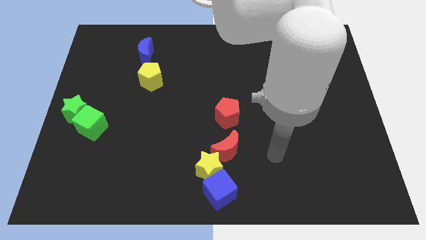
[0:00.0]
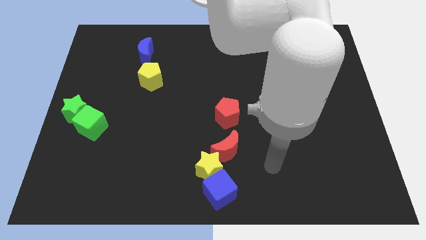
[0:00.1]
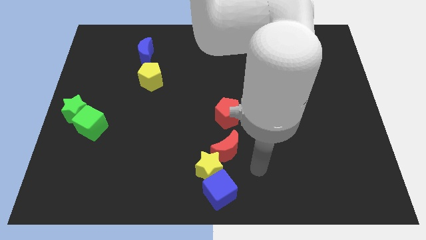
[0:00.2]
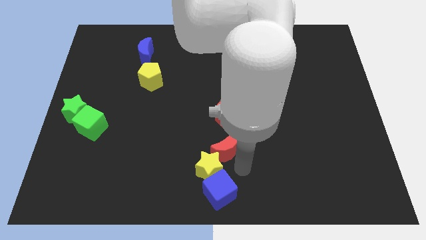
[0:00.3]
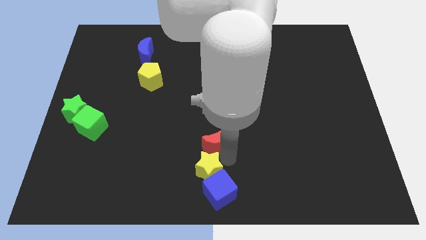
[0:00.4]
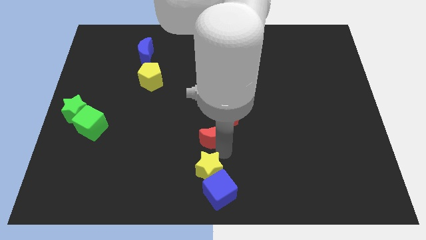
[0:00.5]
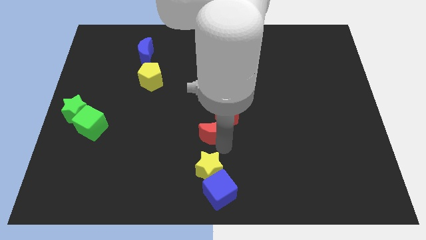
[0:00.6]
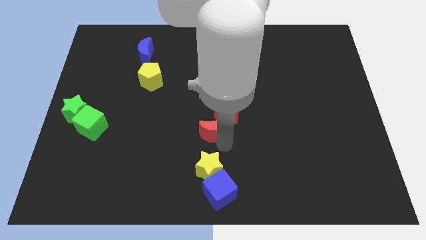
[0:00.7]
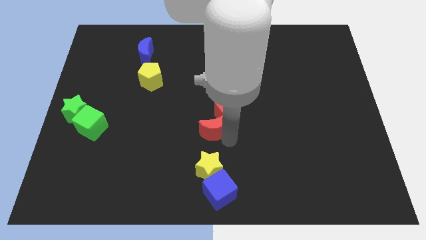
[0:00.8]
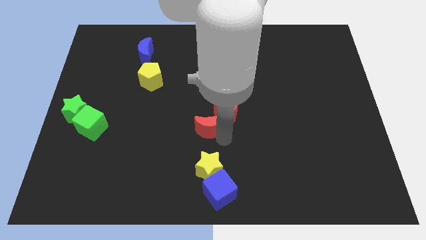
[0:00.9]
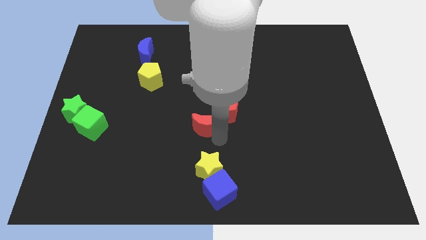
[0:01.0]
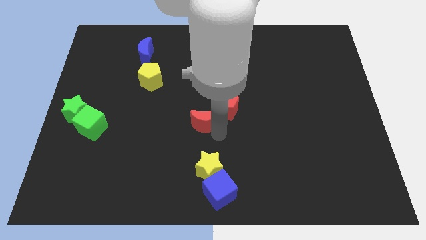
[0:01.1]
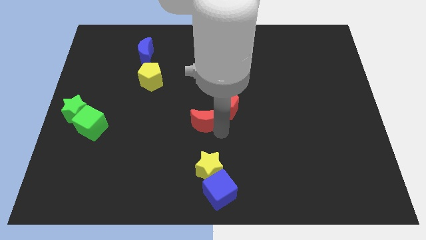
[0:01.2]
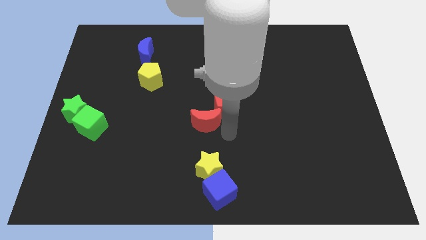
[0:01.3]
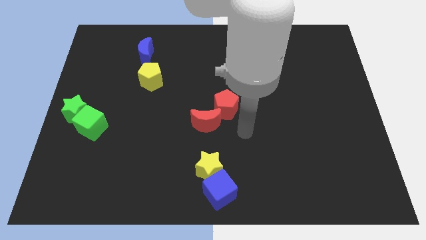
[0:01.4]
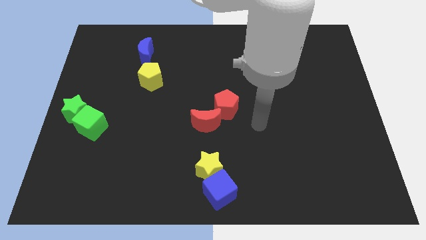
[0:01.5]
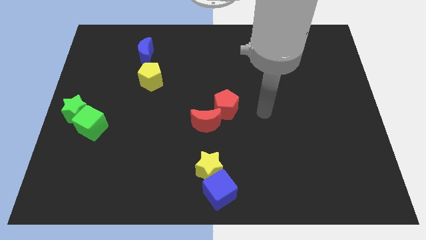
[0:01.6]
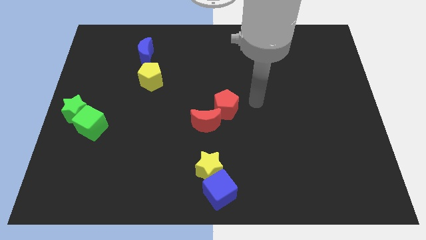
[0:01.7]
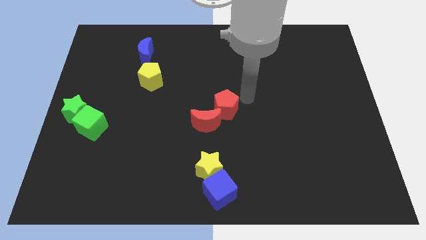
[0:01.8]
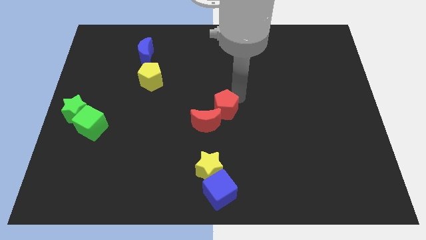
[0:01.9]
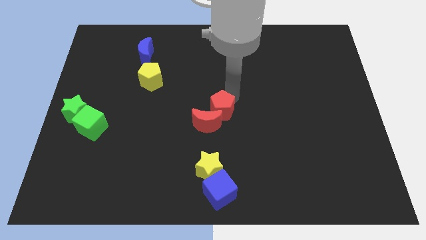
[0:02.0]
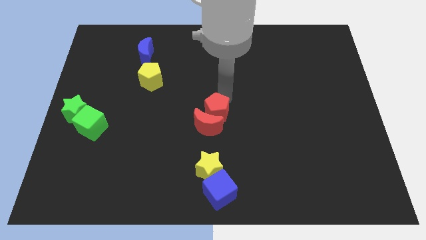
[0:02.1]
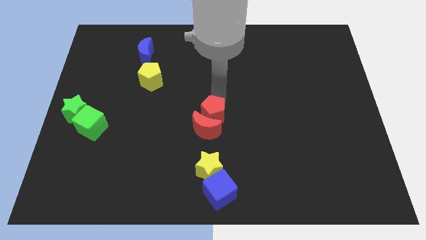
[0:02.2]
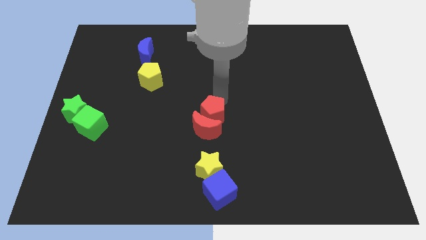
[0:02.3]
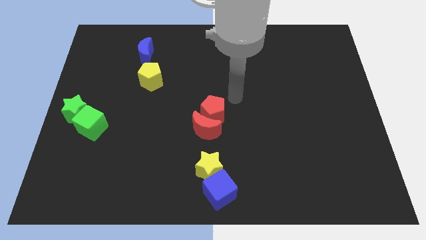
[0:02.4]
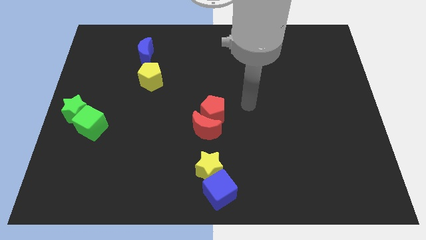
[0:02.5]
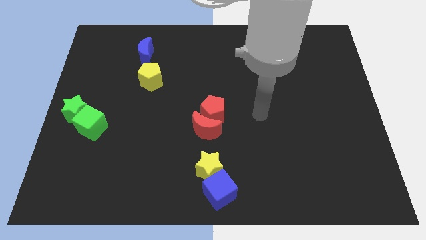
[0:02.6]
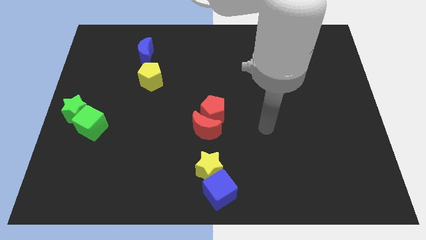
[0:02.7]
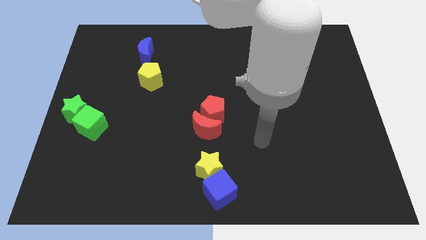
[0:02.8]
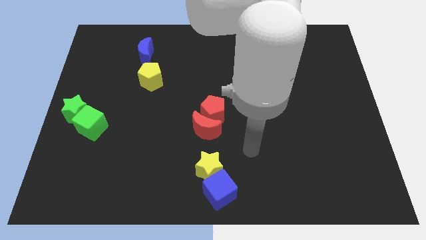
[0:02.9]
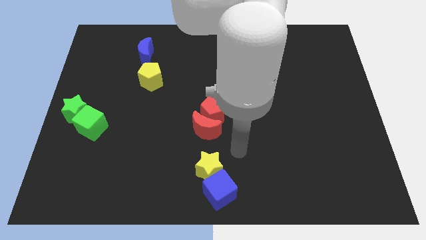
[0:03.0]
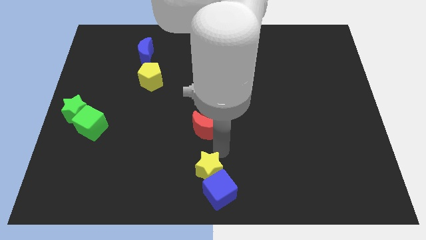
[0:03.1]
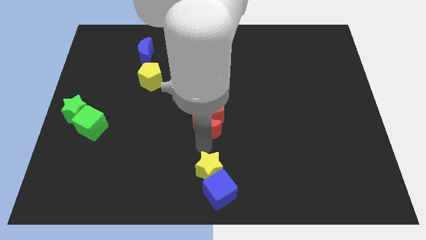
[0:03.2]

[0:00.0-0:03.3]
slightly touch the red moon and red pentagon

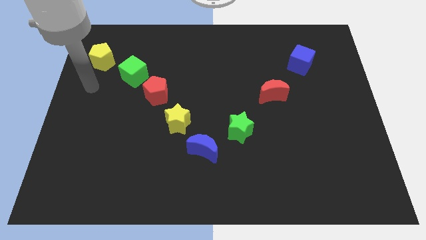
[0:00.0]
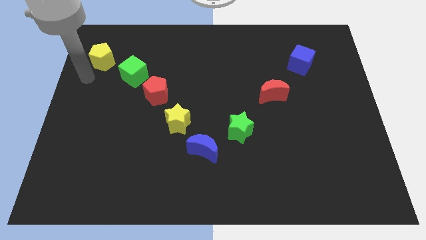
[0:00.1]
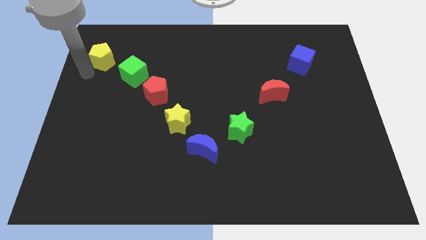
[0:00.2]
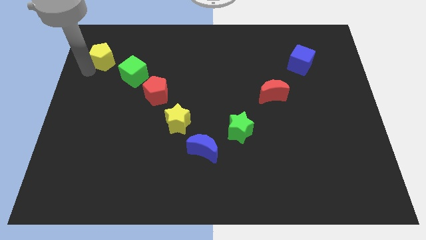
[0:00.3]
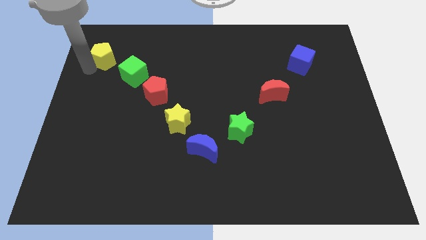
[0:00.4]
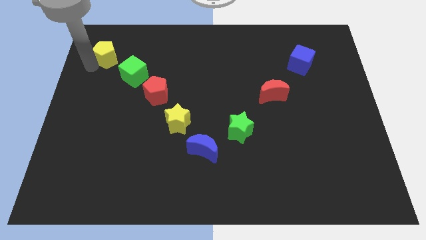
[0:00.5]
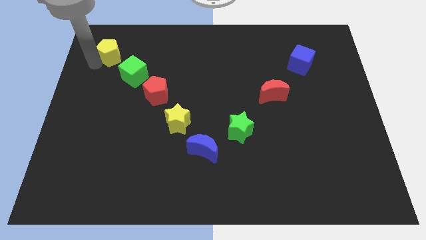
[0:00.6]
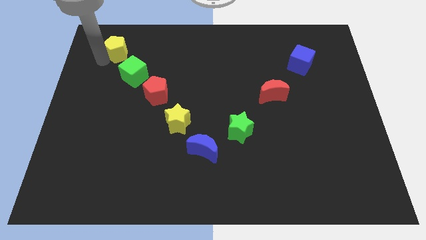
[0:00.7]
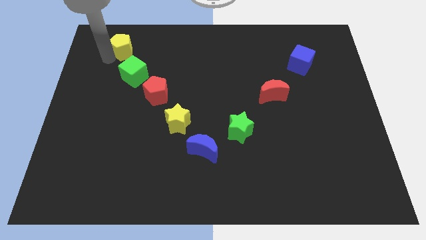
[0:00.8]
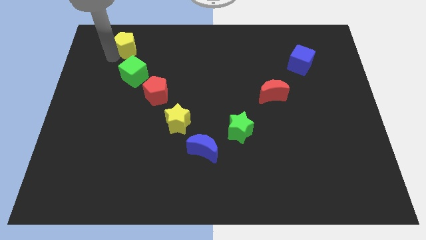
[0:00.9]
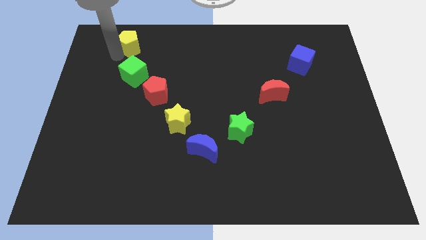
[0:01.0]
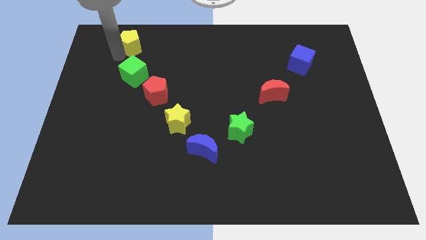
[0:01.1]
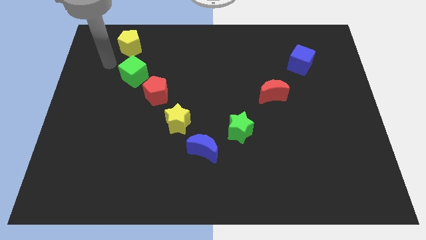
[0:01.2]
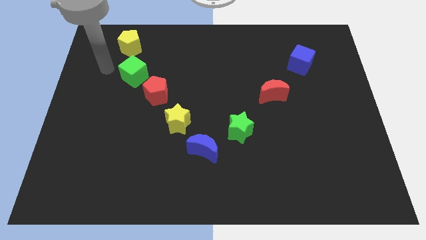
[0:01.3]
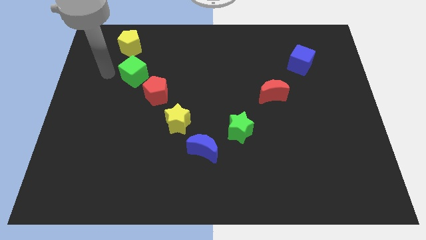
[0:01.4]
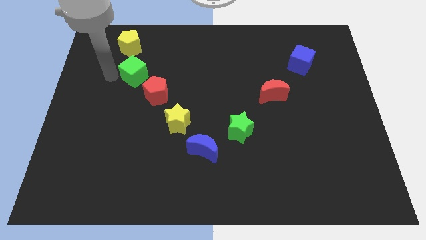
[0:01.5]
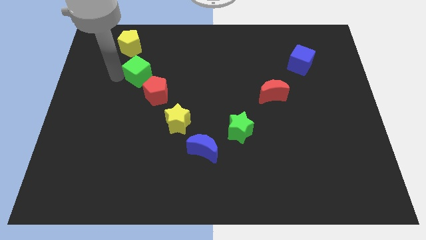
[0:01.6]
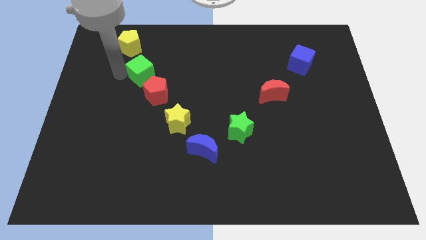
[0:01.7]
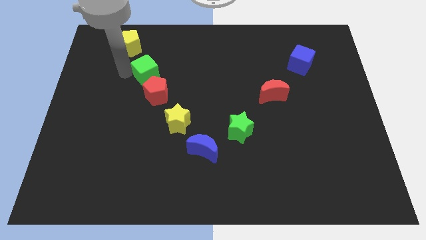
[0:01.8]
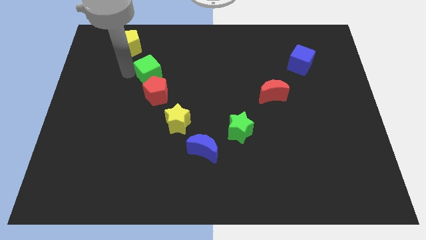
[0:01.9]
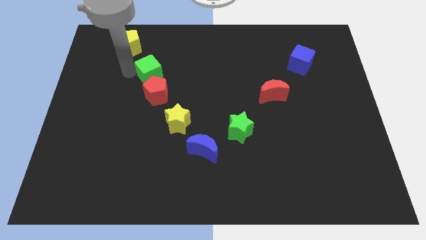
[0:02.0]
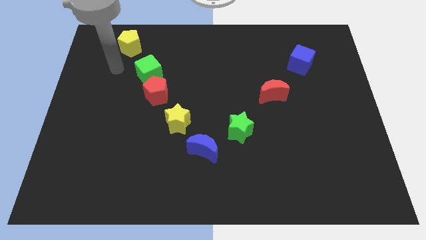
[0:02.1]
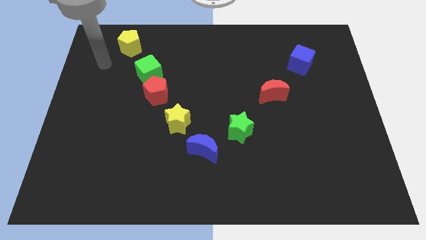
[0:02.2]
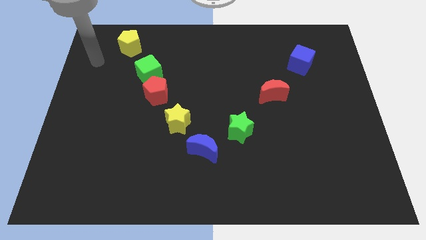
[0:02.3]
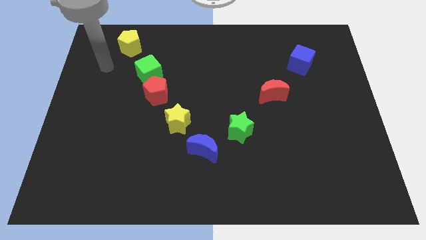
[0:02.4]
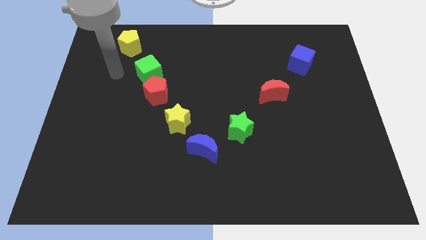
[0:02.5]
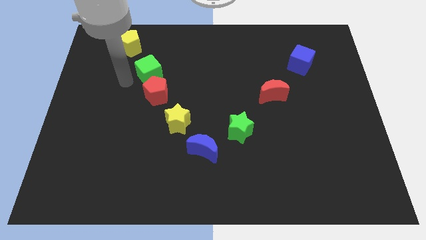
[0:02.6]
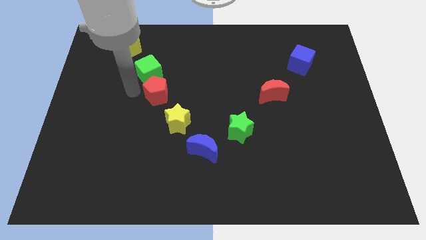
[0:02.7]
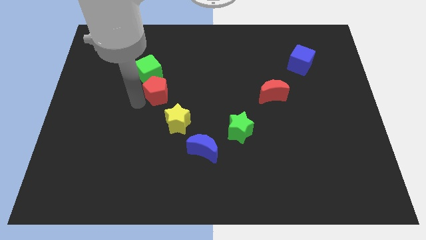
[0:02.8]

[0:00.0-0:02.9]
push yellow pentagon above green cube

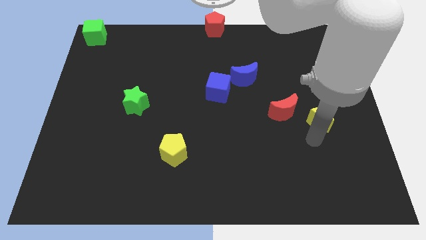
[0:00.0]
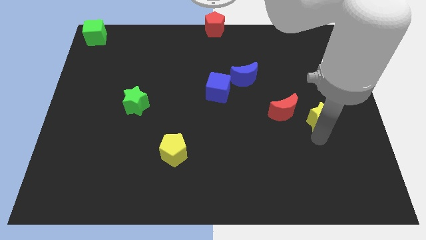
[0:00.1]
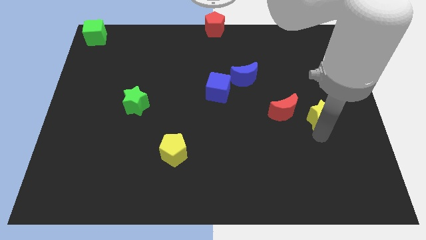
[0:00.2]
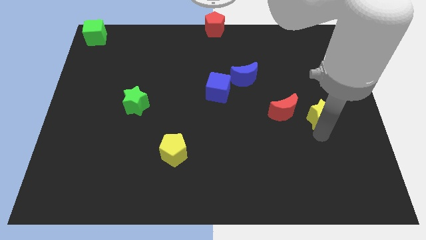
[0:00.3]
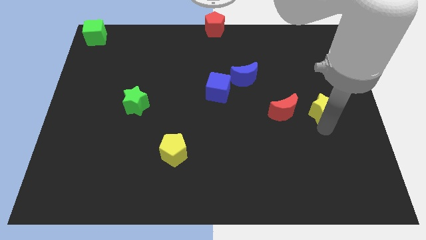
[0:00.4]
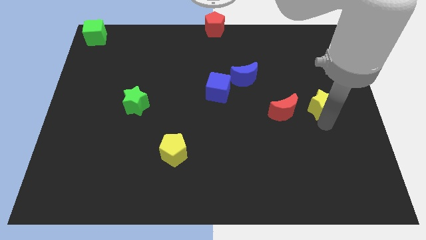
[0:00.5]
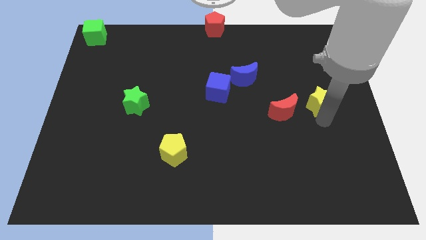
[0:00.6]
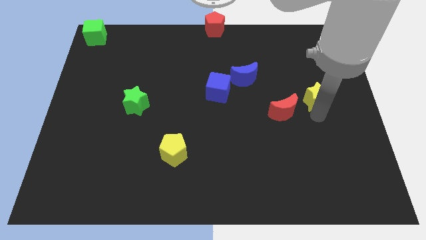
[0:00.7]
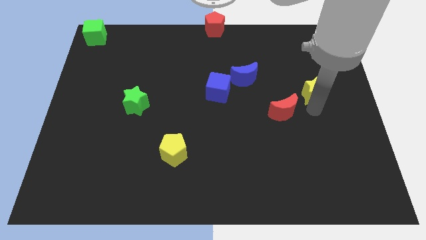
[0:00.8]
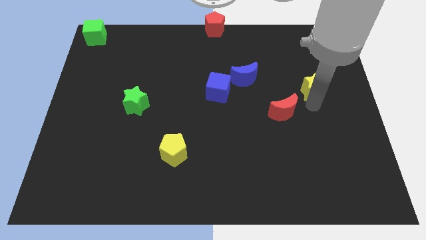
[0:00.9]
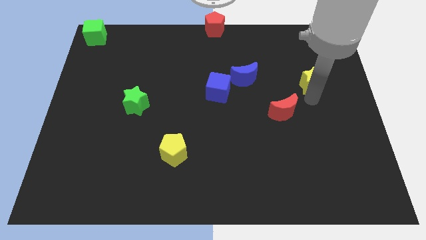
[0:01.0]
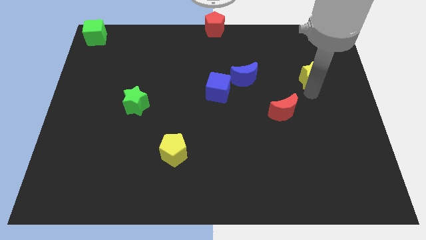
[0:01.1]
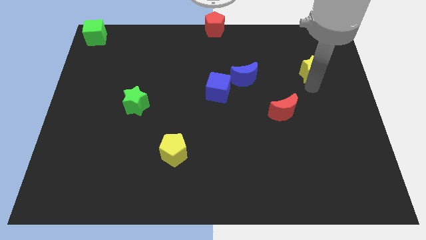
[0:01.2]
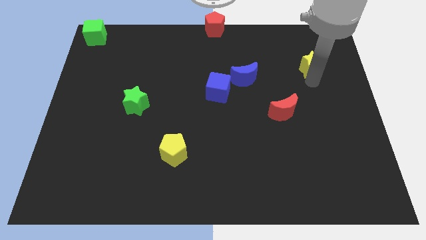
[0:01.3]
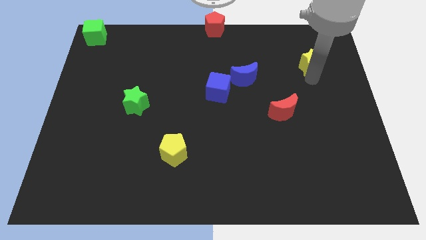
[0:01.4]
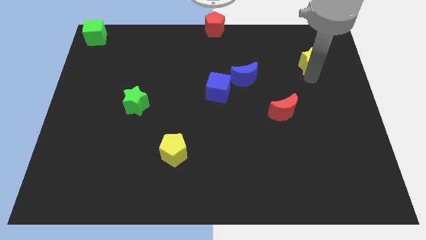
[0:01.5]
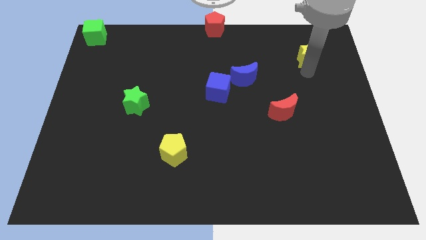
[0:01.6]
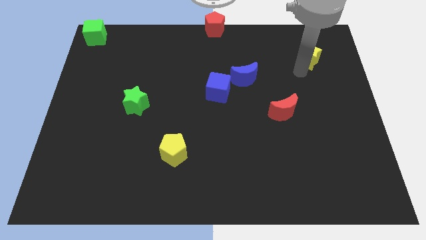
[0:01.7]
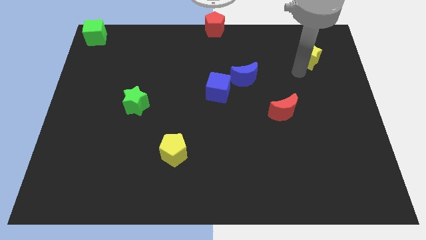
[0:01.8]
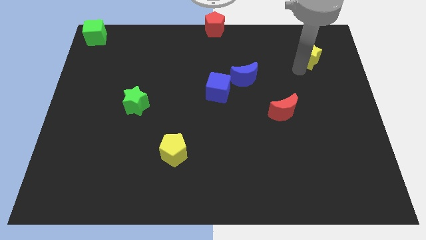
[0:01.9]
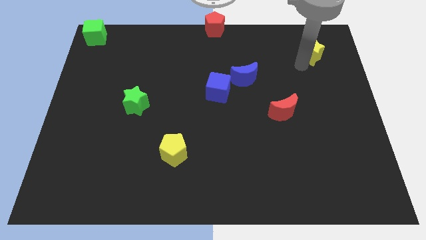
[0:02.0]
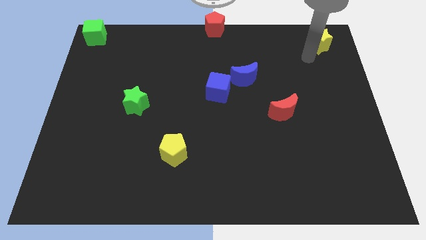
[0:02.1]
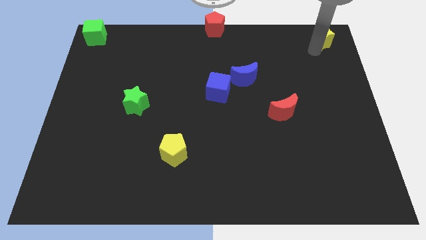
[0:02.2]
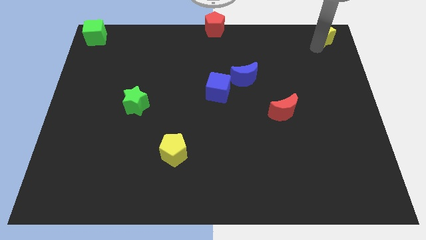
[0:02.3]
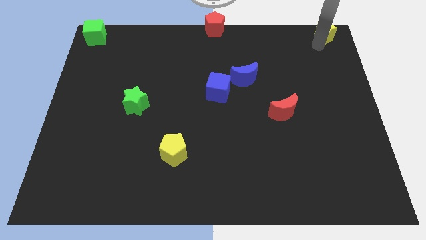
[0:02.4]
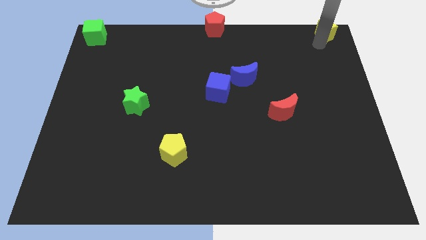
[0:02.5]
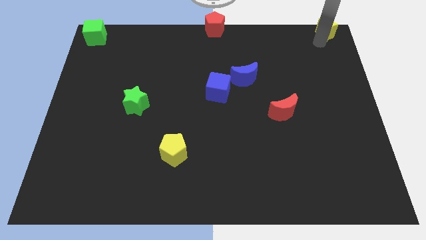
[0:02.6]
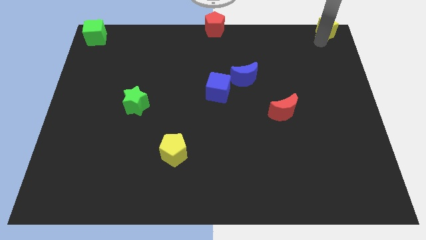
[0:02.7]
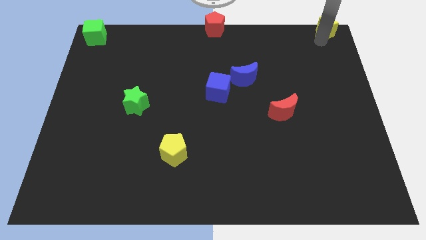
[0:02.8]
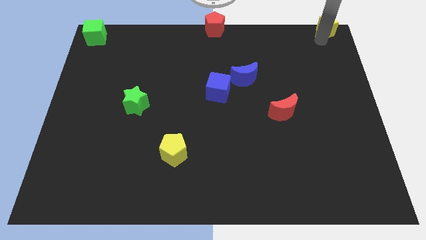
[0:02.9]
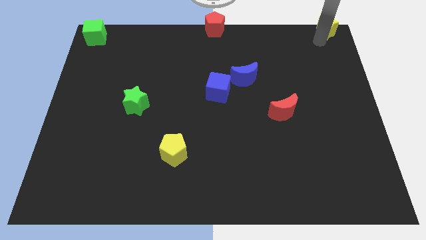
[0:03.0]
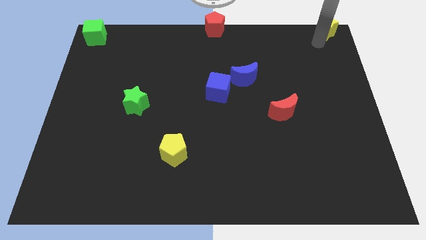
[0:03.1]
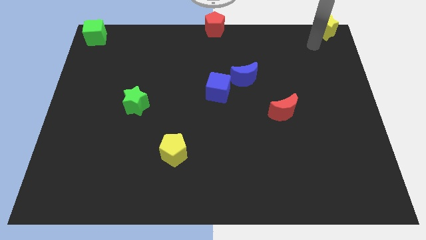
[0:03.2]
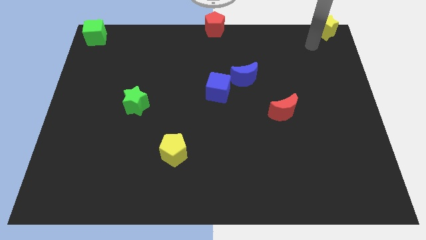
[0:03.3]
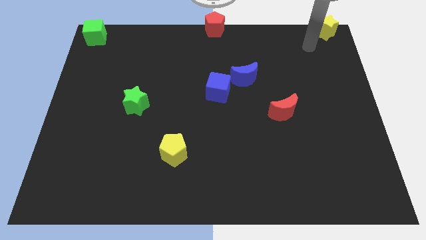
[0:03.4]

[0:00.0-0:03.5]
put the yellow star at the top right corner
